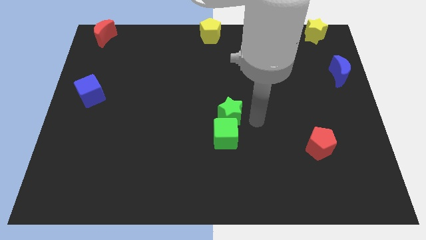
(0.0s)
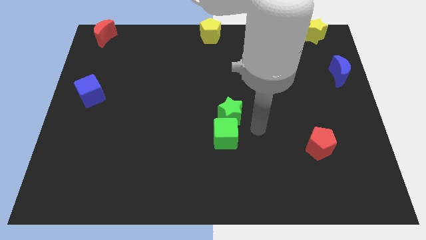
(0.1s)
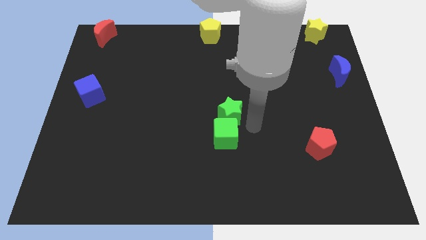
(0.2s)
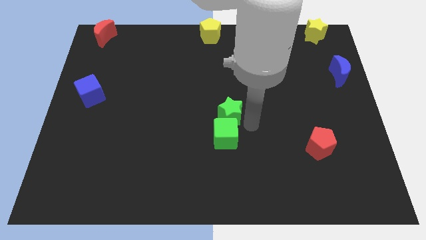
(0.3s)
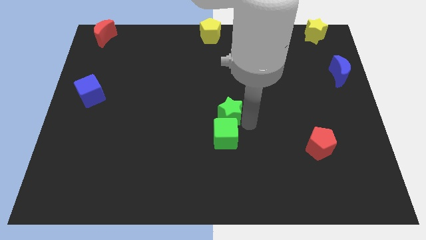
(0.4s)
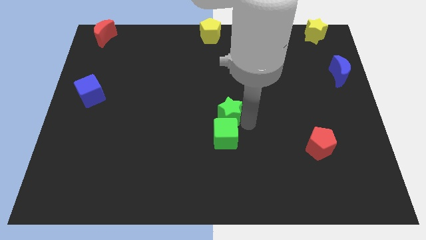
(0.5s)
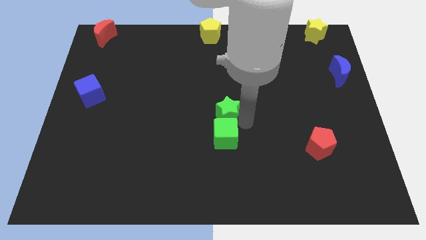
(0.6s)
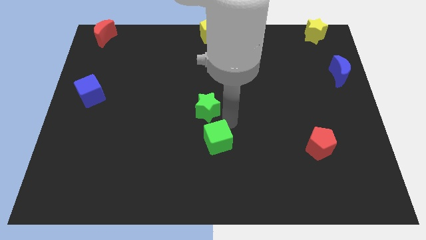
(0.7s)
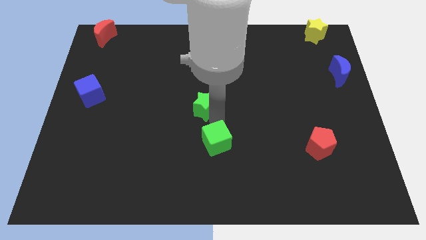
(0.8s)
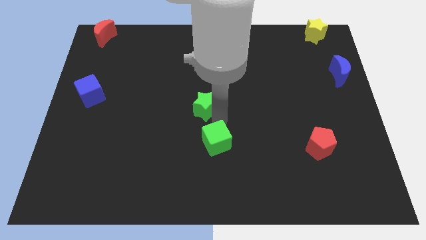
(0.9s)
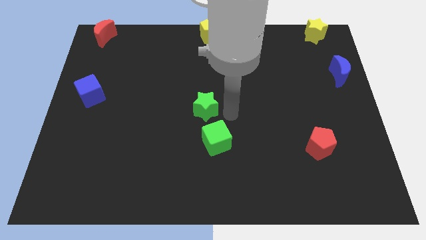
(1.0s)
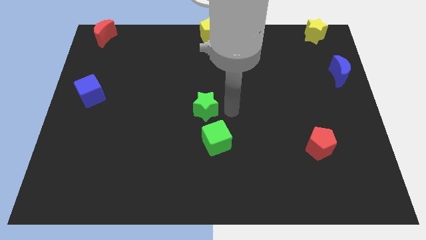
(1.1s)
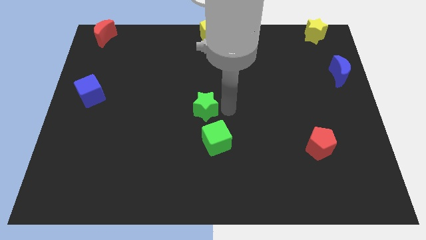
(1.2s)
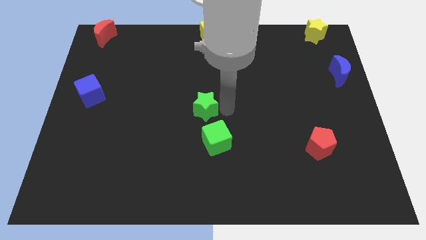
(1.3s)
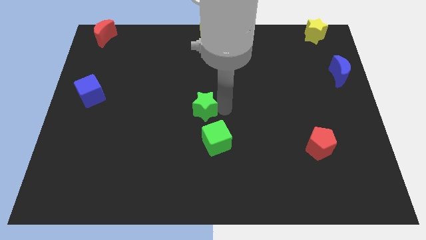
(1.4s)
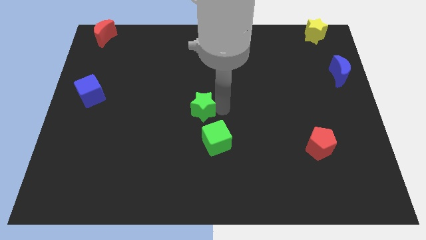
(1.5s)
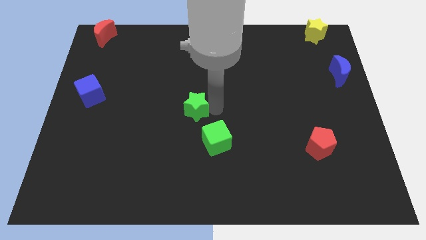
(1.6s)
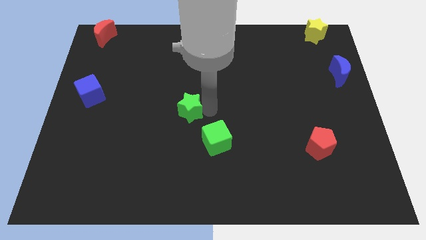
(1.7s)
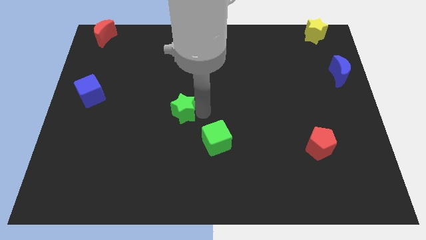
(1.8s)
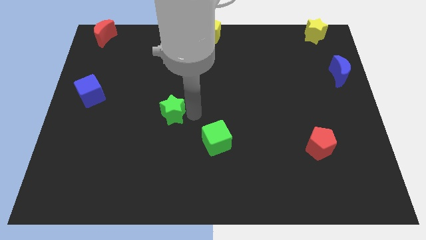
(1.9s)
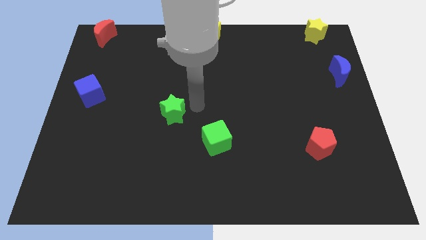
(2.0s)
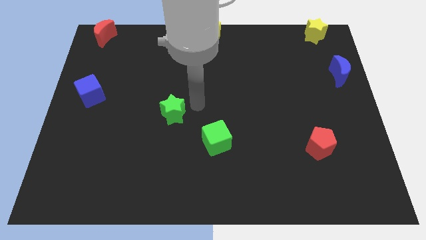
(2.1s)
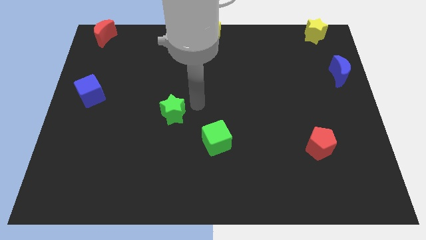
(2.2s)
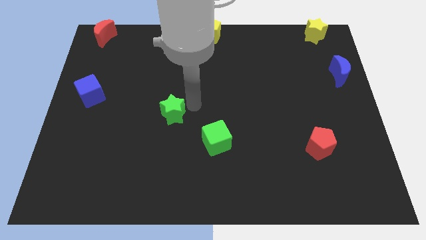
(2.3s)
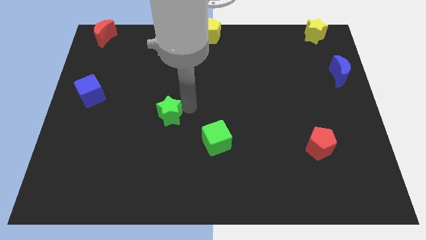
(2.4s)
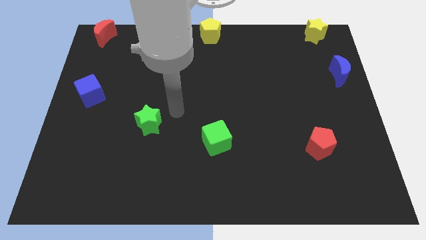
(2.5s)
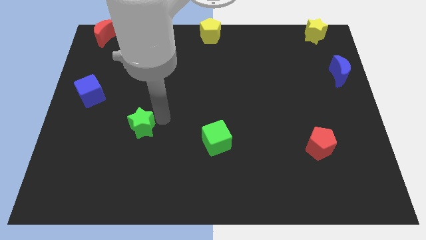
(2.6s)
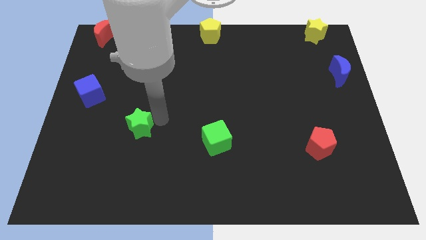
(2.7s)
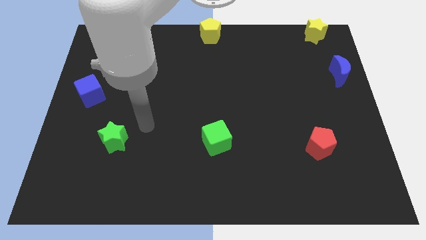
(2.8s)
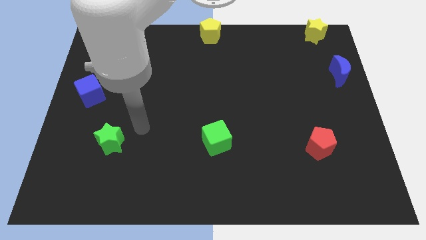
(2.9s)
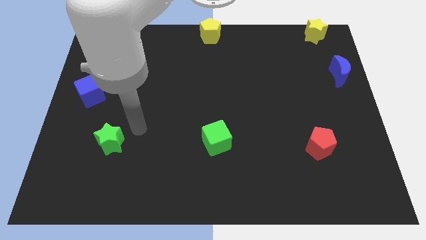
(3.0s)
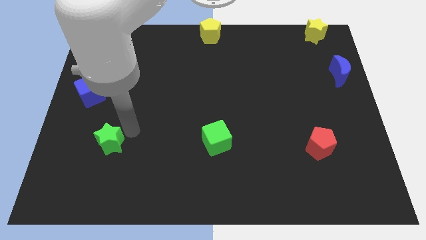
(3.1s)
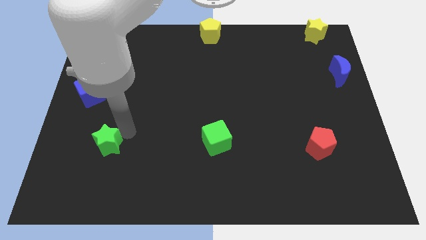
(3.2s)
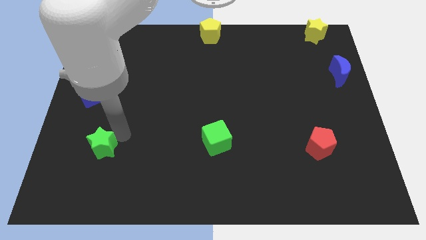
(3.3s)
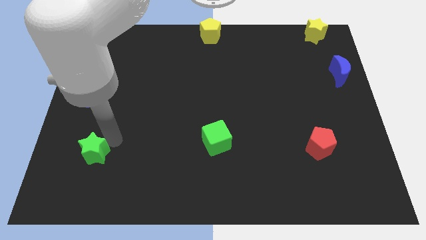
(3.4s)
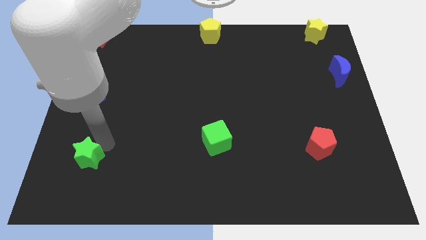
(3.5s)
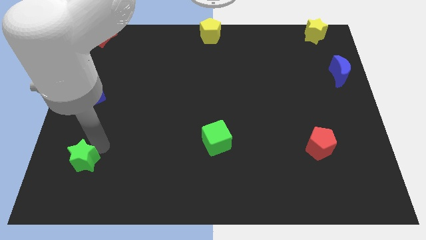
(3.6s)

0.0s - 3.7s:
separate the green star from the green cube

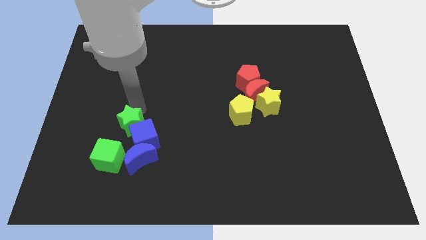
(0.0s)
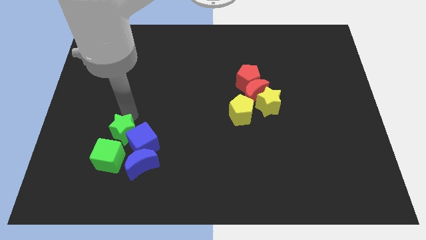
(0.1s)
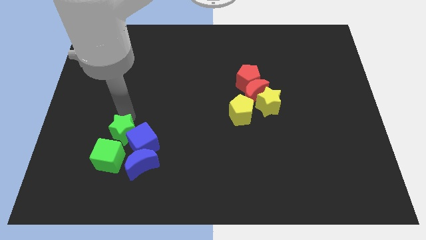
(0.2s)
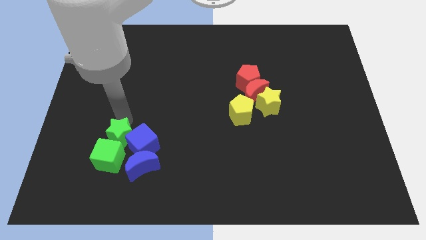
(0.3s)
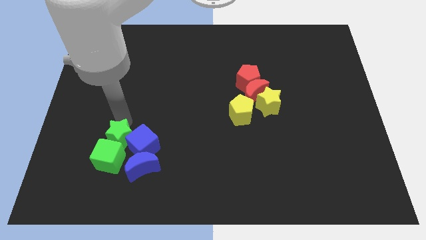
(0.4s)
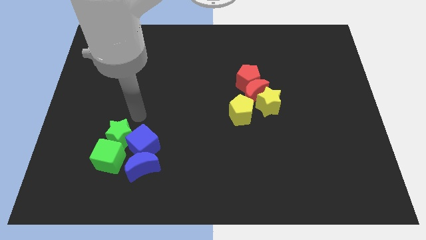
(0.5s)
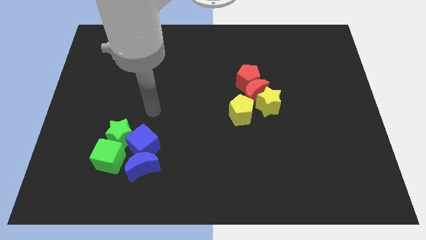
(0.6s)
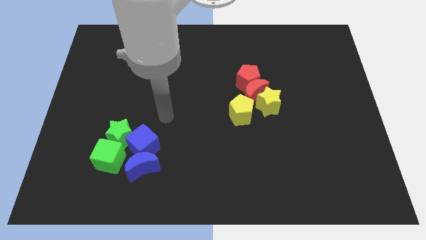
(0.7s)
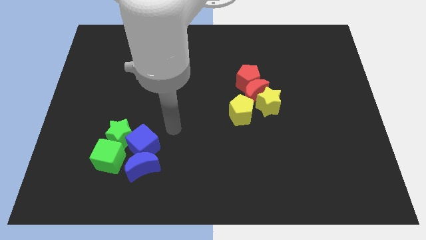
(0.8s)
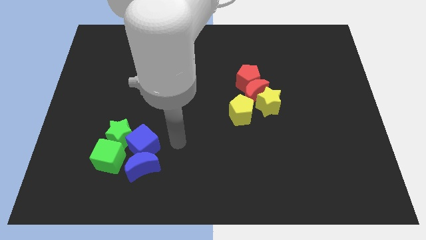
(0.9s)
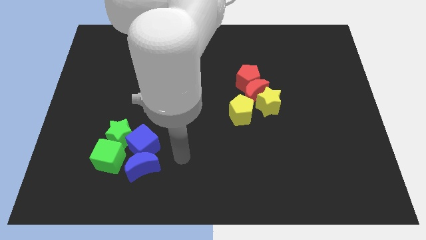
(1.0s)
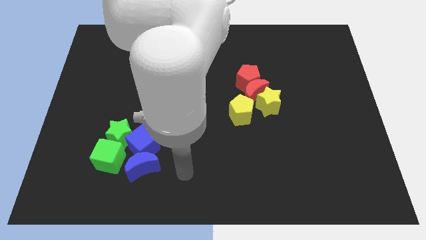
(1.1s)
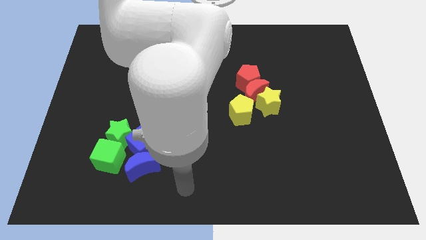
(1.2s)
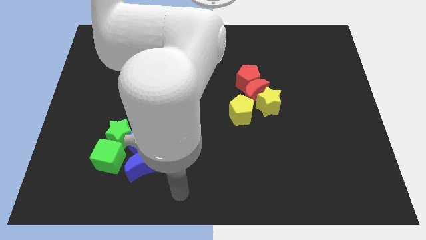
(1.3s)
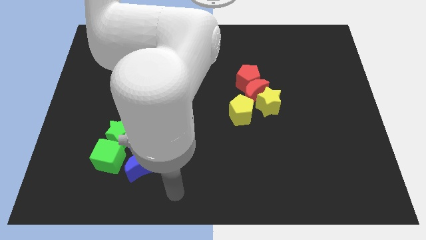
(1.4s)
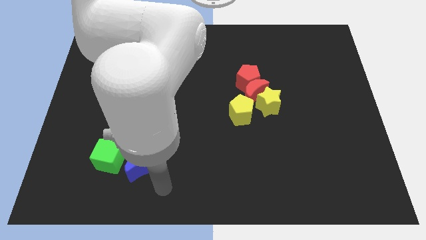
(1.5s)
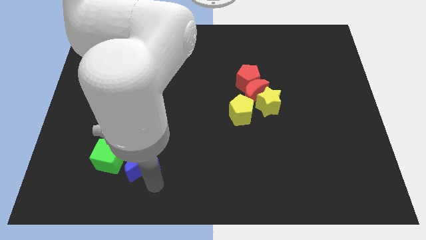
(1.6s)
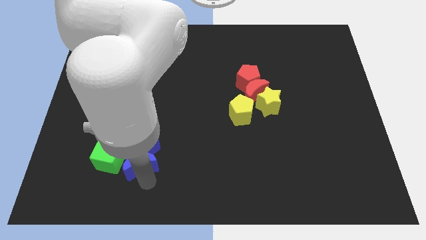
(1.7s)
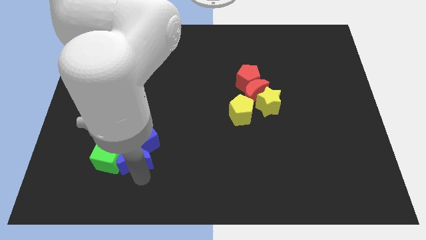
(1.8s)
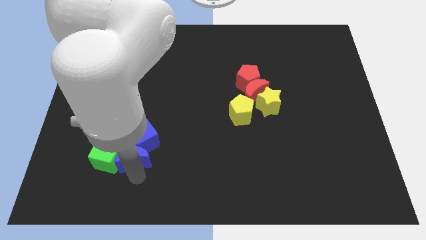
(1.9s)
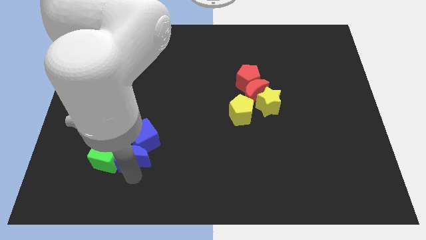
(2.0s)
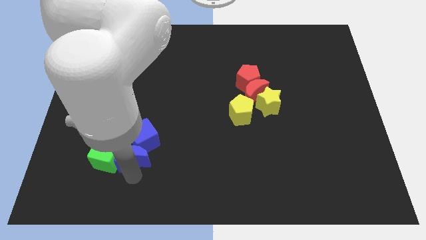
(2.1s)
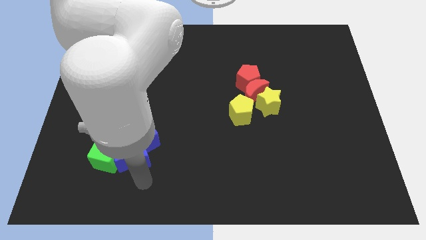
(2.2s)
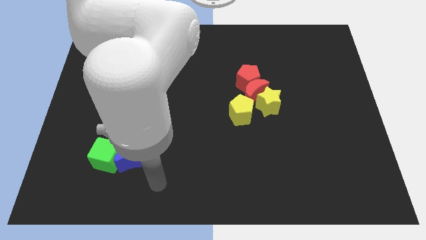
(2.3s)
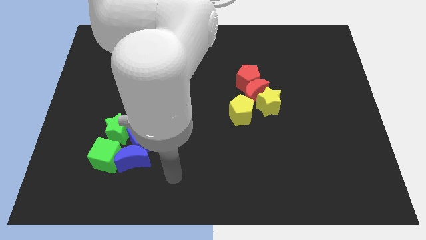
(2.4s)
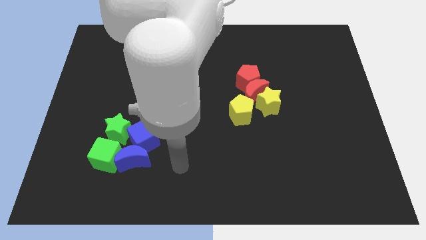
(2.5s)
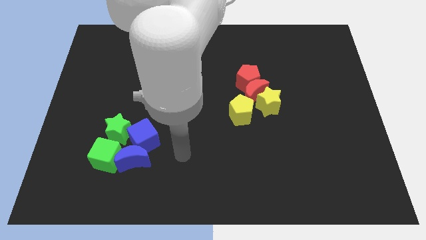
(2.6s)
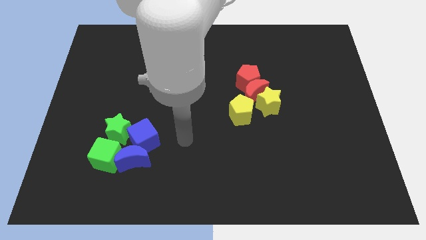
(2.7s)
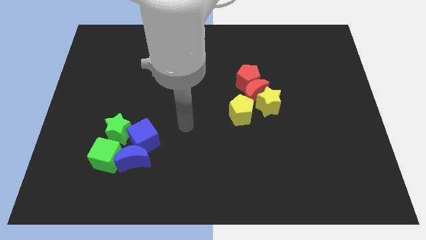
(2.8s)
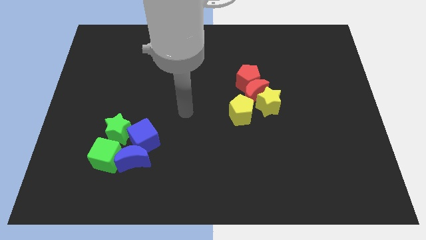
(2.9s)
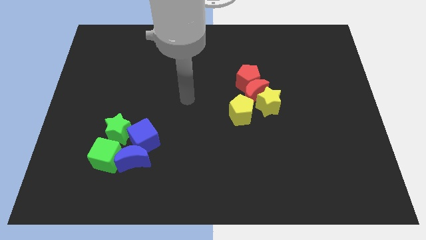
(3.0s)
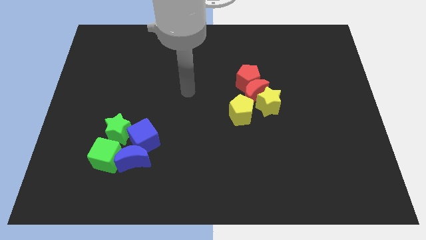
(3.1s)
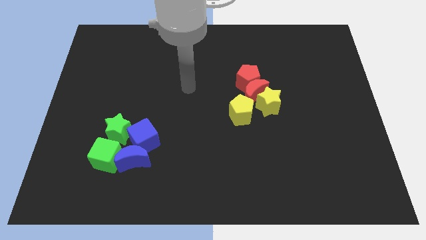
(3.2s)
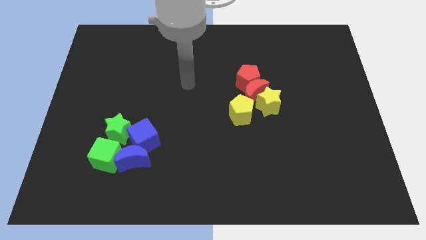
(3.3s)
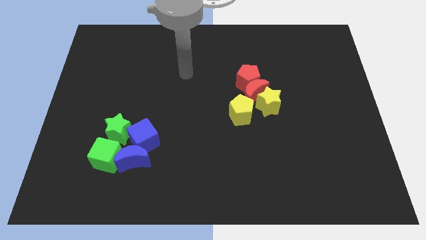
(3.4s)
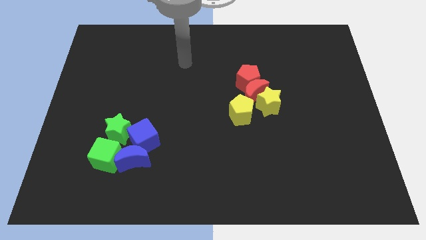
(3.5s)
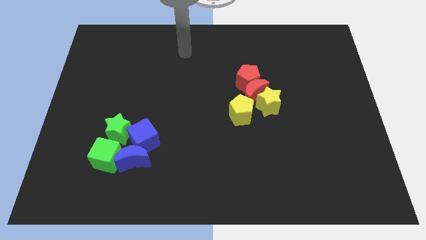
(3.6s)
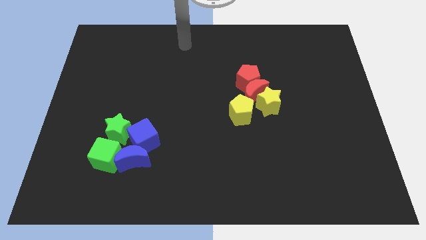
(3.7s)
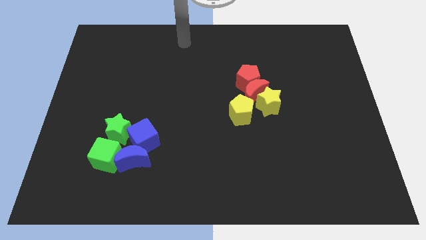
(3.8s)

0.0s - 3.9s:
push the blue moon into the green cube

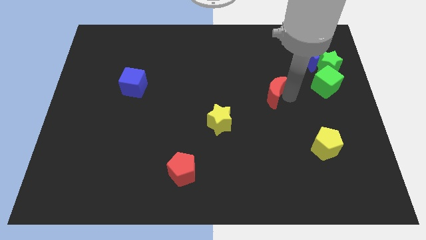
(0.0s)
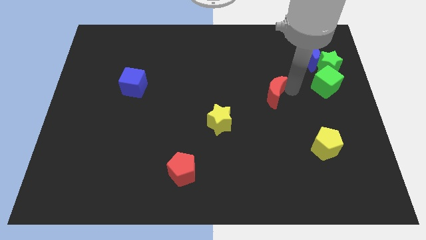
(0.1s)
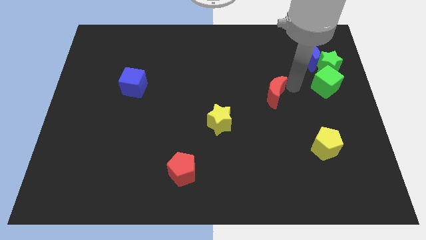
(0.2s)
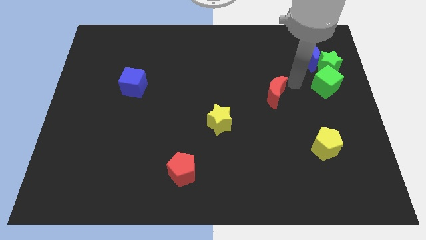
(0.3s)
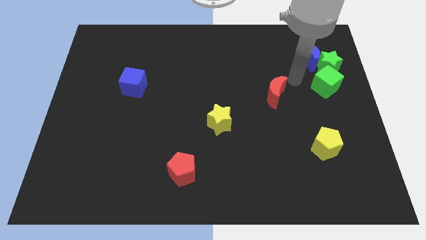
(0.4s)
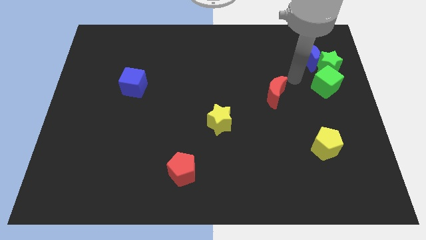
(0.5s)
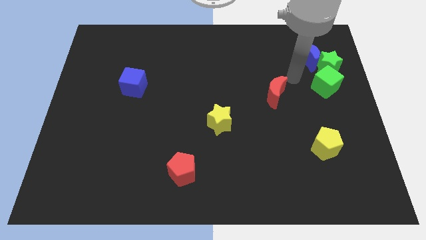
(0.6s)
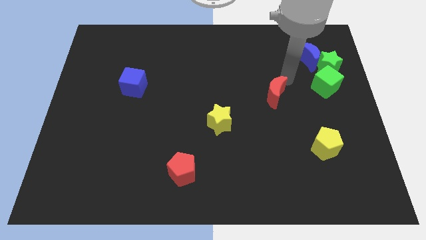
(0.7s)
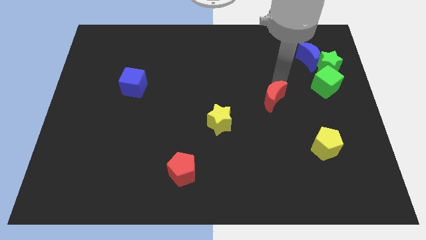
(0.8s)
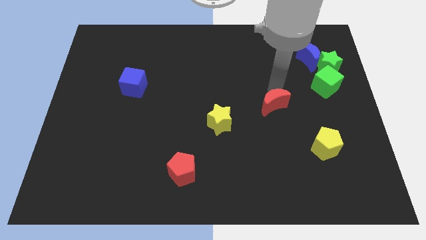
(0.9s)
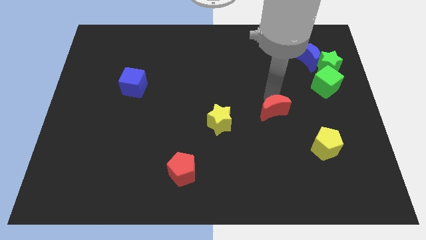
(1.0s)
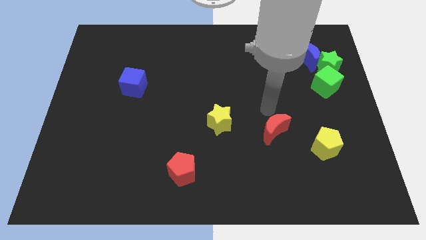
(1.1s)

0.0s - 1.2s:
place the red moon in between the yellow star and yellow pentagon

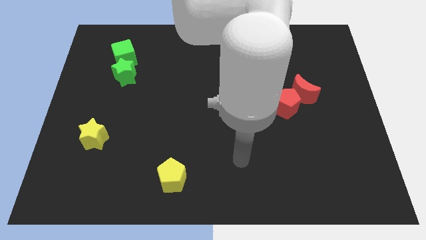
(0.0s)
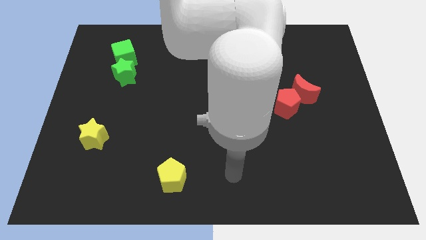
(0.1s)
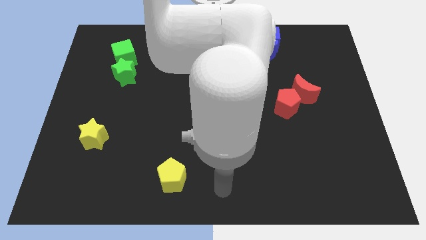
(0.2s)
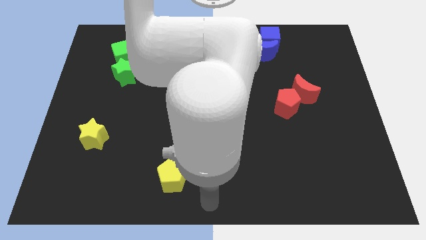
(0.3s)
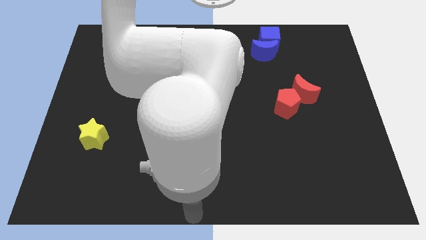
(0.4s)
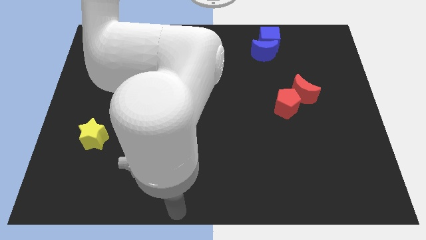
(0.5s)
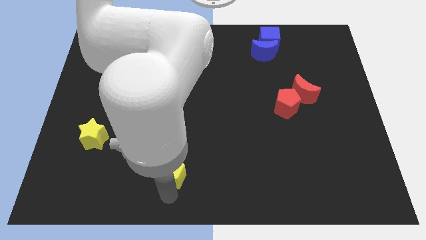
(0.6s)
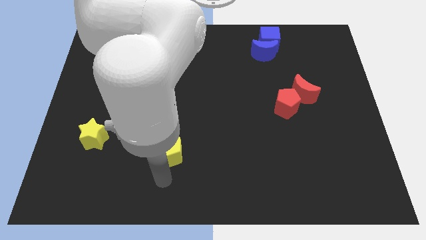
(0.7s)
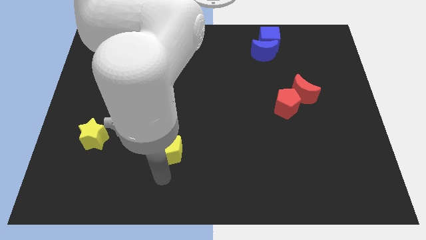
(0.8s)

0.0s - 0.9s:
slide the yellow pentagon up slightly
